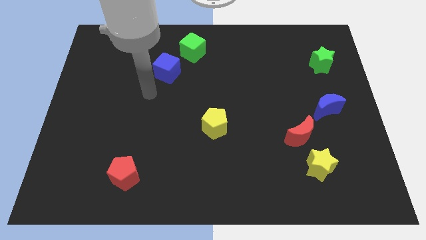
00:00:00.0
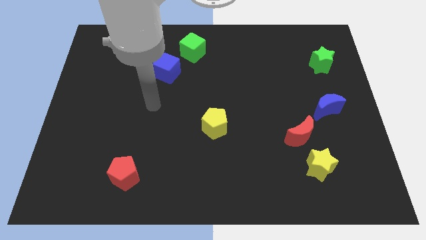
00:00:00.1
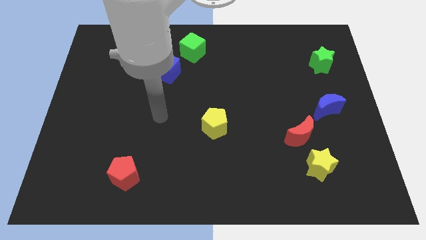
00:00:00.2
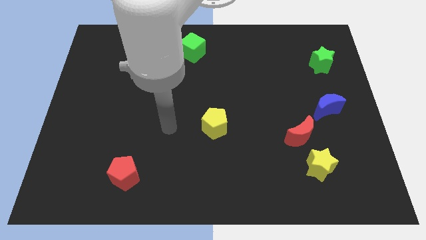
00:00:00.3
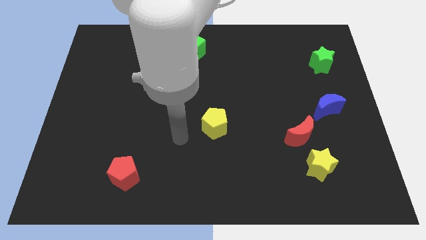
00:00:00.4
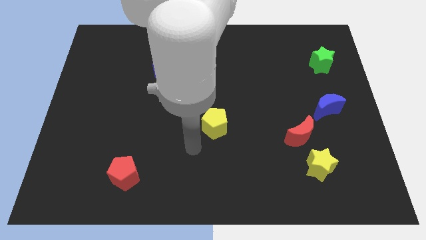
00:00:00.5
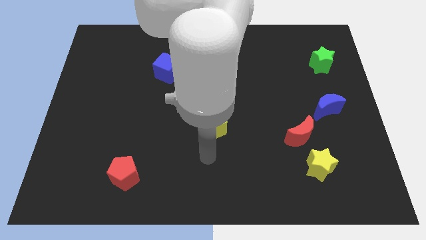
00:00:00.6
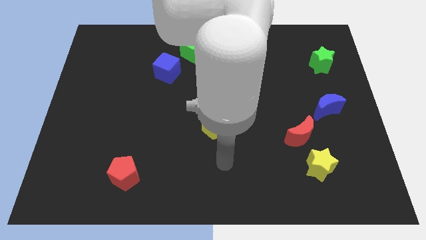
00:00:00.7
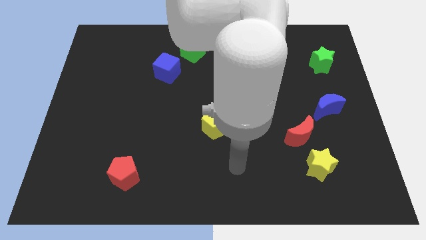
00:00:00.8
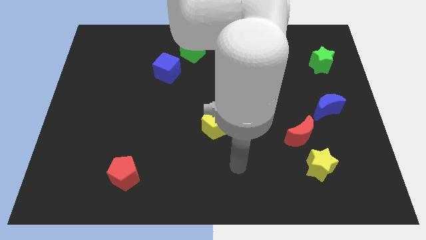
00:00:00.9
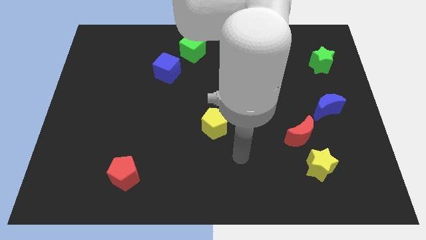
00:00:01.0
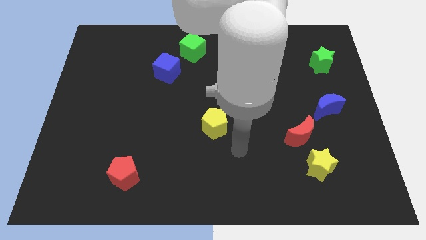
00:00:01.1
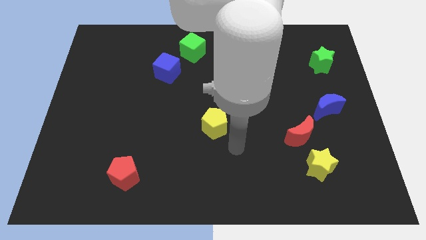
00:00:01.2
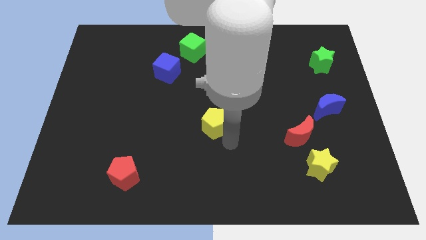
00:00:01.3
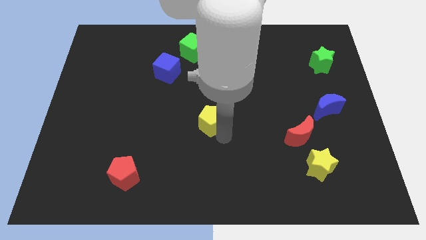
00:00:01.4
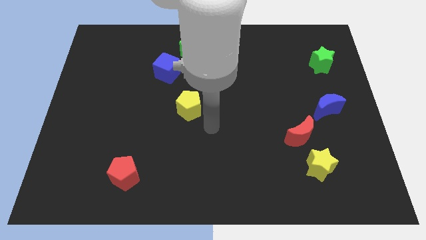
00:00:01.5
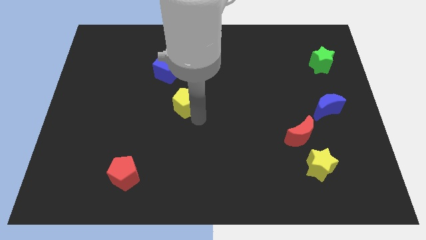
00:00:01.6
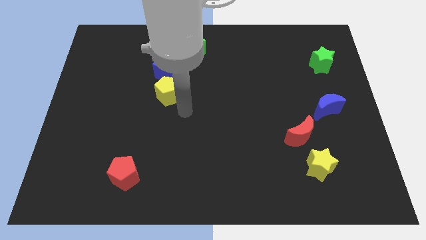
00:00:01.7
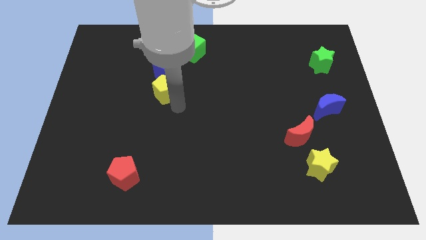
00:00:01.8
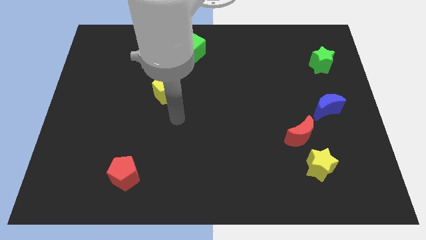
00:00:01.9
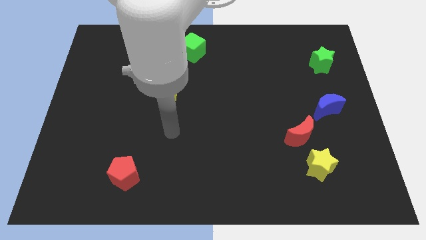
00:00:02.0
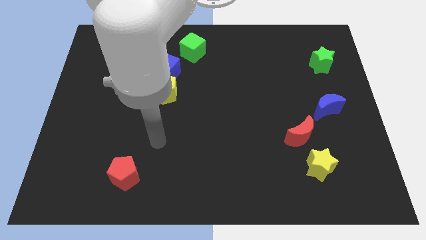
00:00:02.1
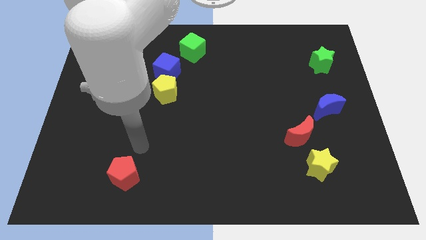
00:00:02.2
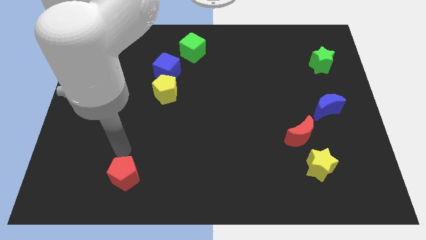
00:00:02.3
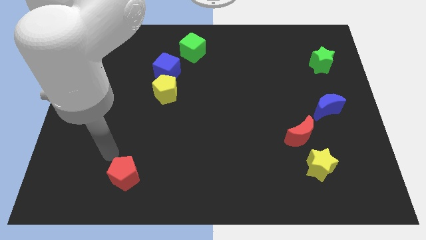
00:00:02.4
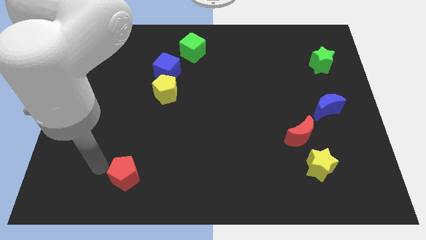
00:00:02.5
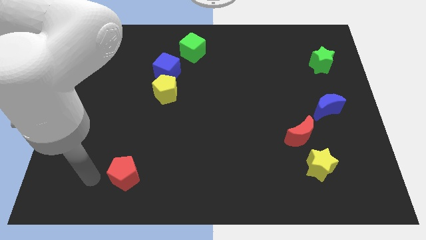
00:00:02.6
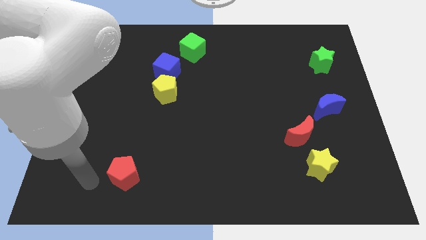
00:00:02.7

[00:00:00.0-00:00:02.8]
place the yellow pentagon below the blue cube

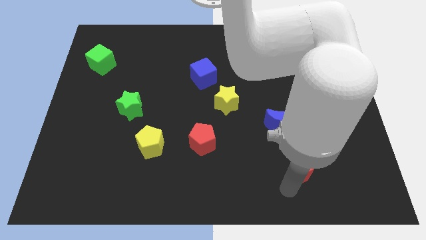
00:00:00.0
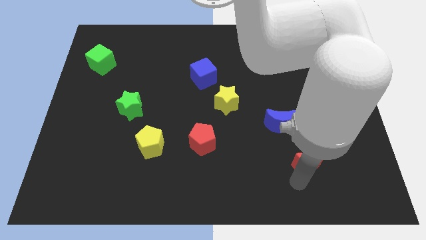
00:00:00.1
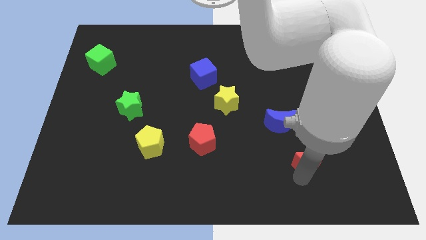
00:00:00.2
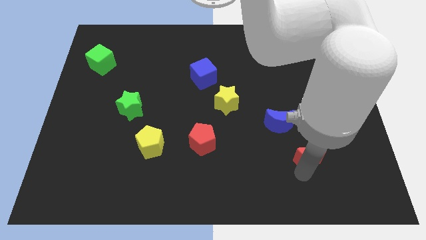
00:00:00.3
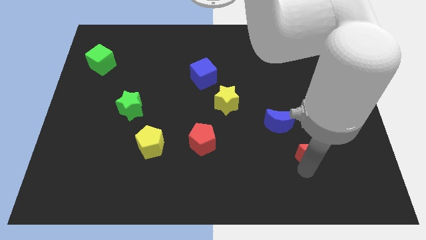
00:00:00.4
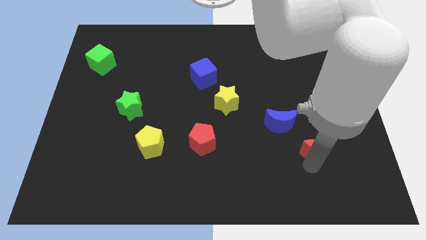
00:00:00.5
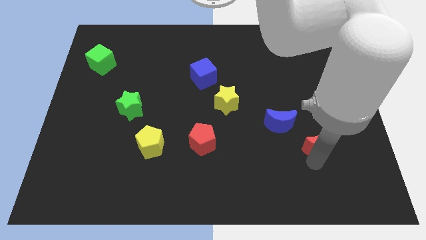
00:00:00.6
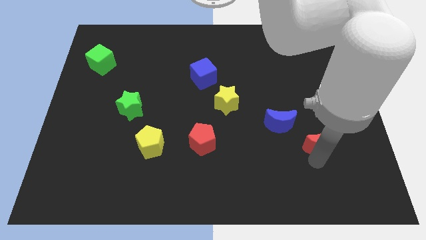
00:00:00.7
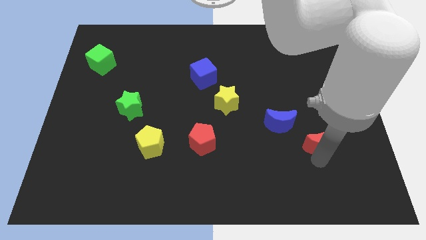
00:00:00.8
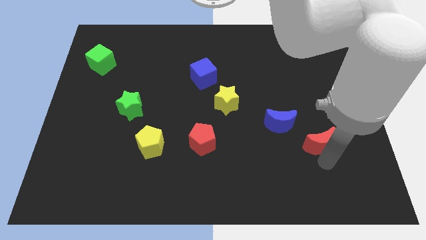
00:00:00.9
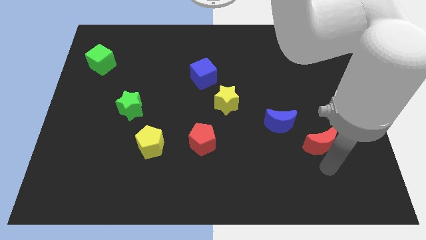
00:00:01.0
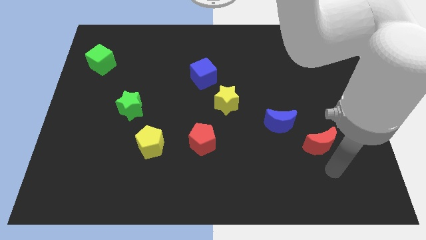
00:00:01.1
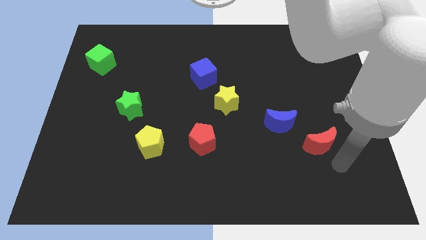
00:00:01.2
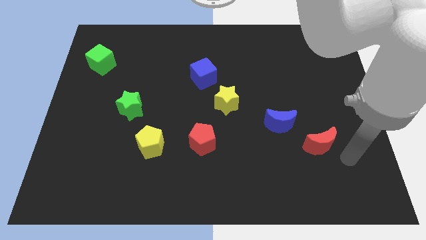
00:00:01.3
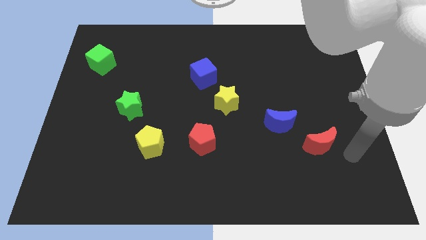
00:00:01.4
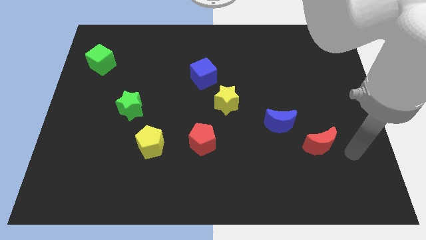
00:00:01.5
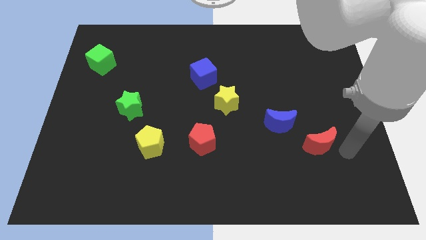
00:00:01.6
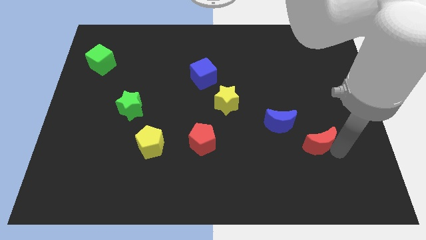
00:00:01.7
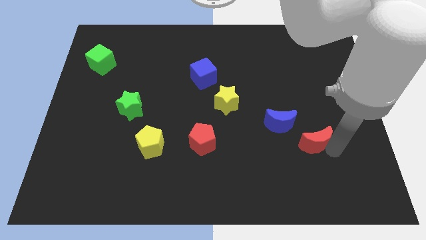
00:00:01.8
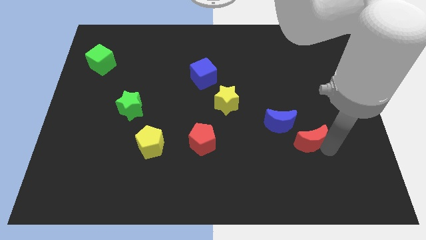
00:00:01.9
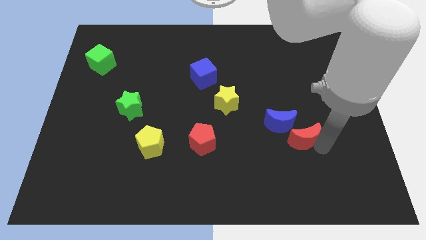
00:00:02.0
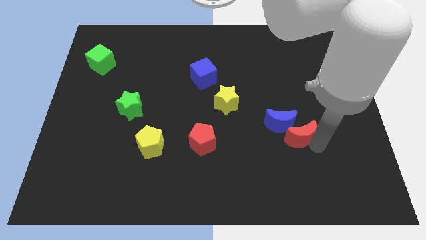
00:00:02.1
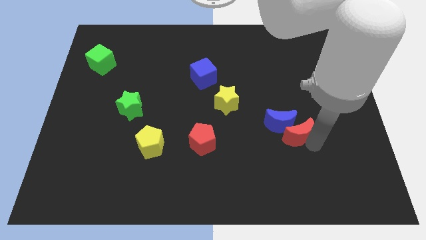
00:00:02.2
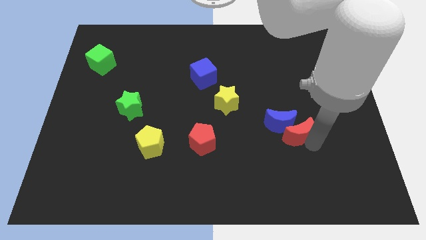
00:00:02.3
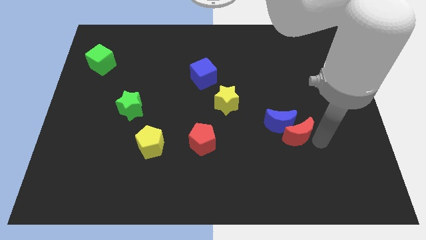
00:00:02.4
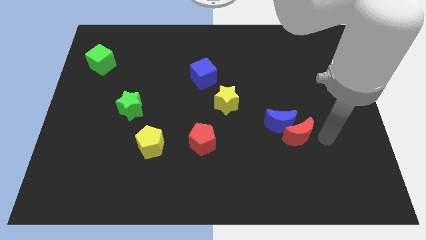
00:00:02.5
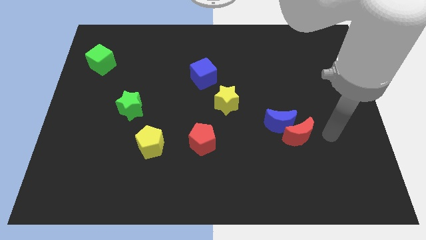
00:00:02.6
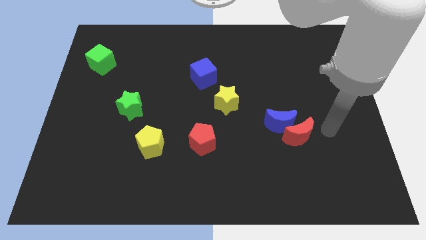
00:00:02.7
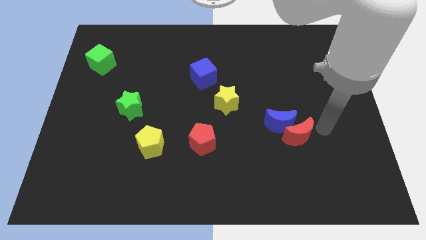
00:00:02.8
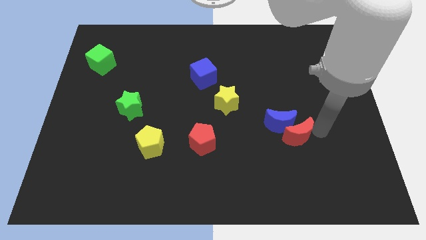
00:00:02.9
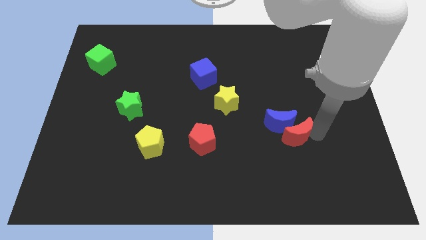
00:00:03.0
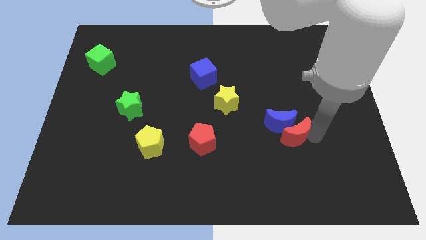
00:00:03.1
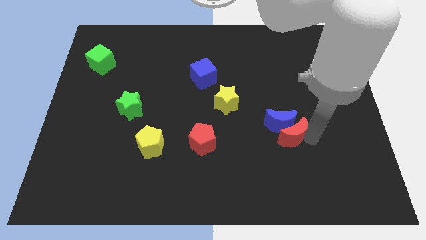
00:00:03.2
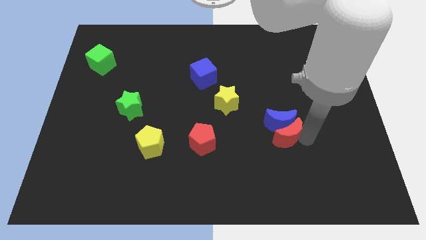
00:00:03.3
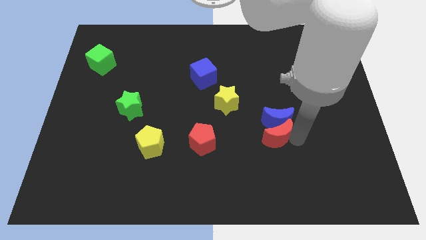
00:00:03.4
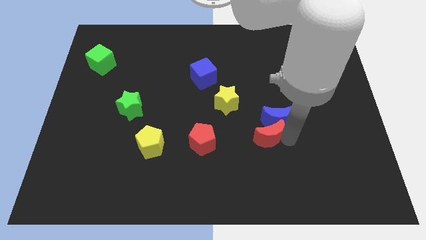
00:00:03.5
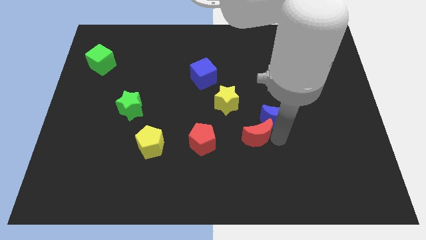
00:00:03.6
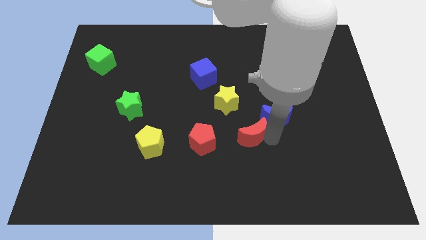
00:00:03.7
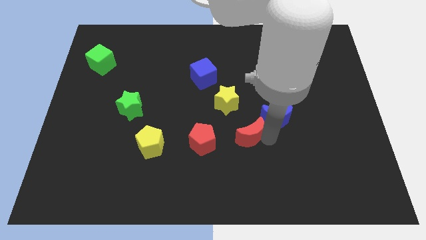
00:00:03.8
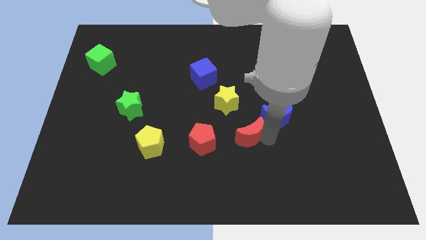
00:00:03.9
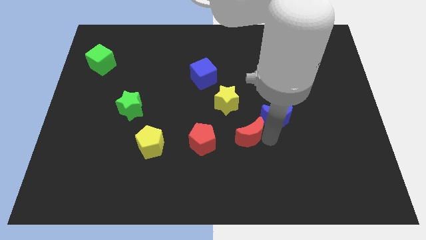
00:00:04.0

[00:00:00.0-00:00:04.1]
push the red crescent in between the red pentagon and blue moon

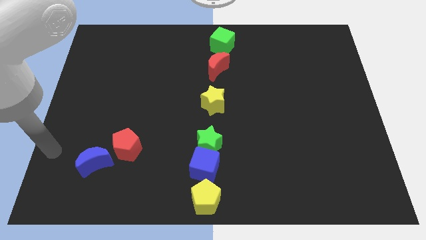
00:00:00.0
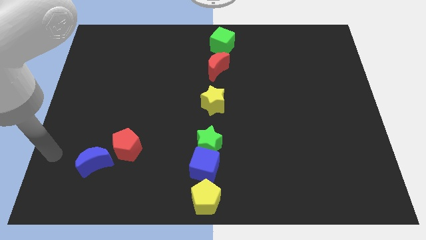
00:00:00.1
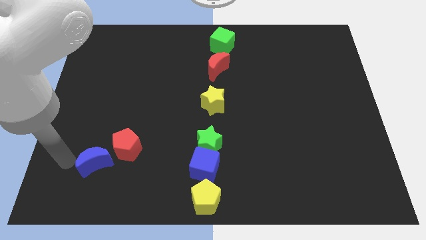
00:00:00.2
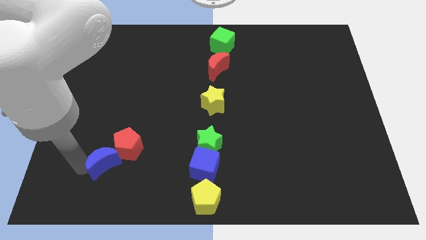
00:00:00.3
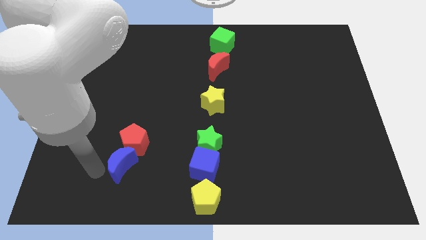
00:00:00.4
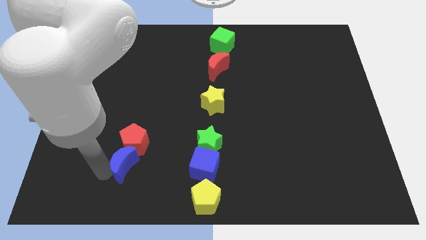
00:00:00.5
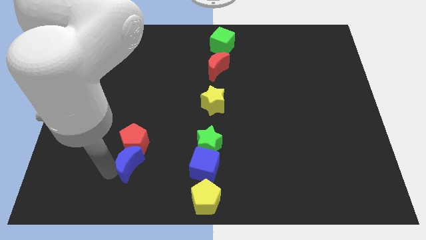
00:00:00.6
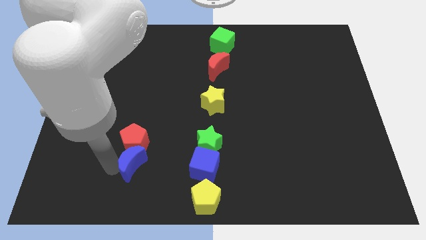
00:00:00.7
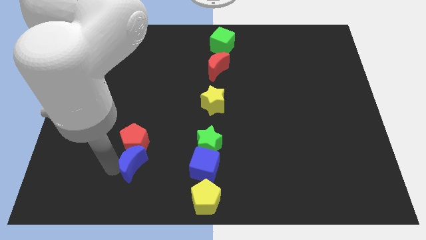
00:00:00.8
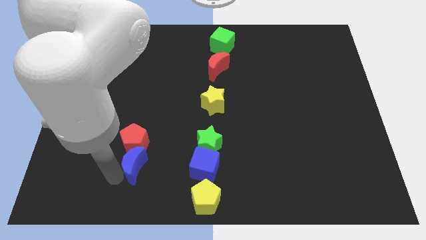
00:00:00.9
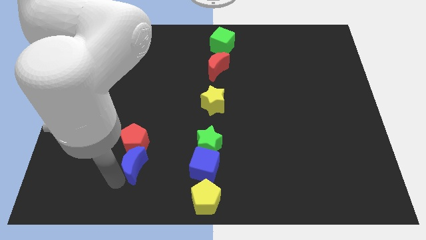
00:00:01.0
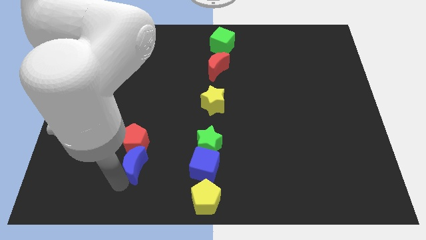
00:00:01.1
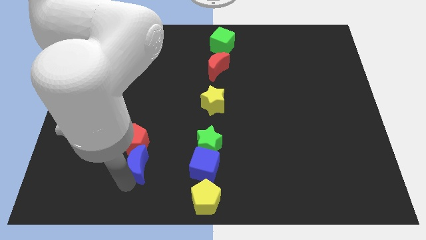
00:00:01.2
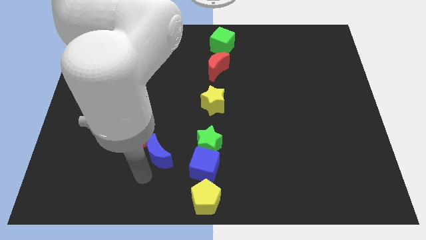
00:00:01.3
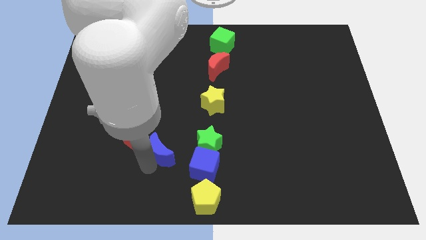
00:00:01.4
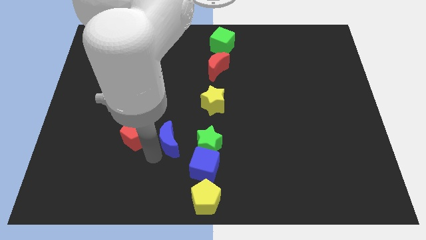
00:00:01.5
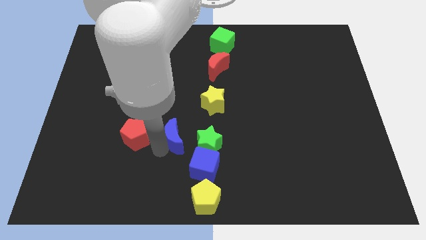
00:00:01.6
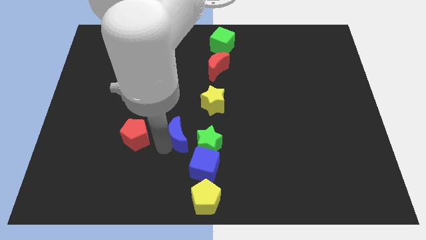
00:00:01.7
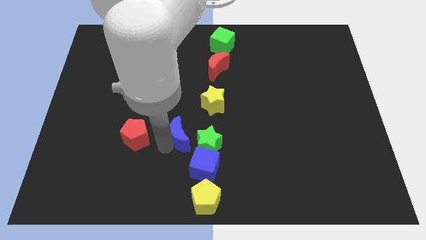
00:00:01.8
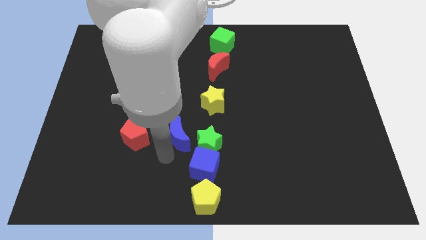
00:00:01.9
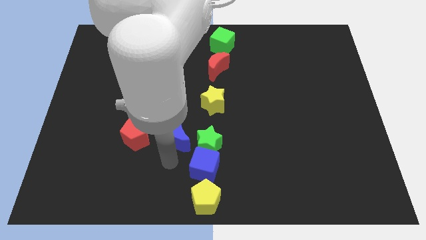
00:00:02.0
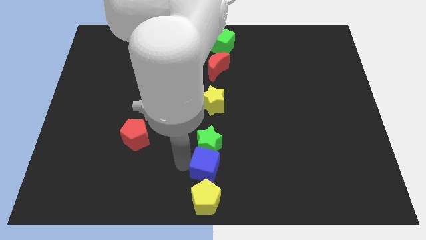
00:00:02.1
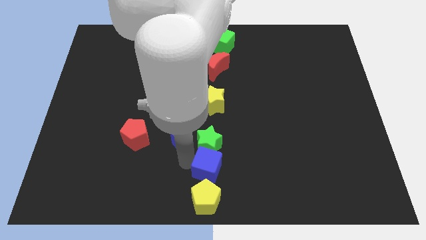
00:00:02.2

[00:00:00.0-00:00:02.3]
move blue moon left to green star
